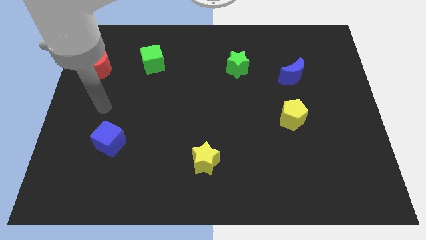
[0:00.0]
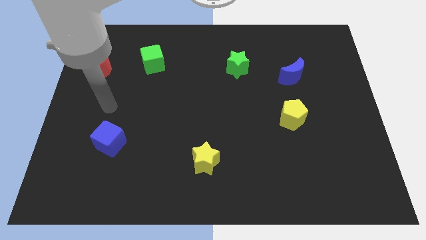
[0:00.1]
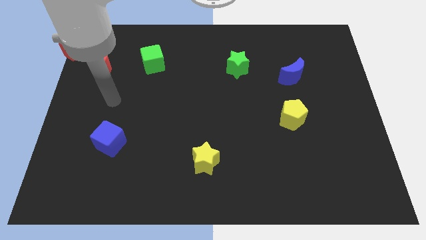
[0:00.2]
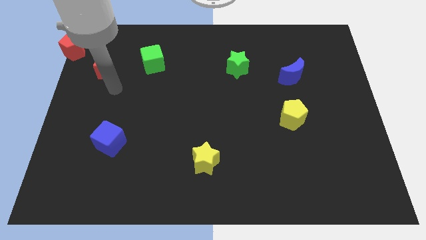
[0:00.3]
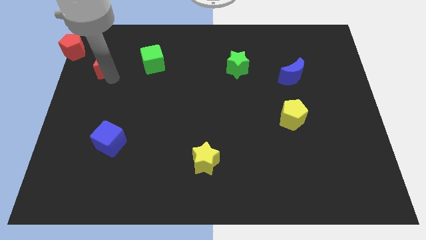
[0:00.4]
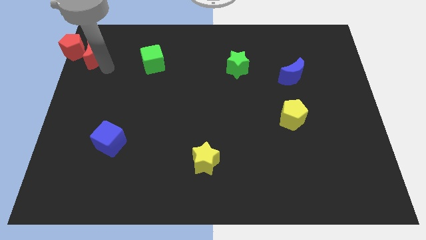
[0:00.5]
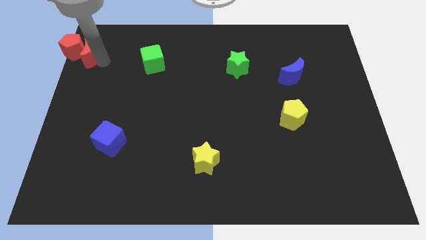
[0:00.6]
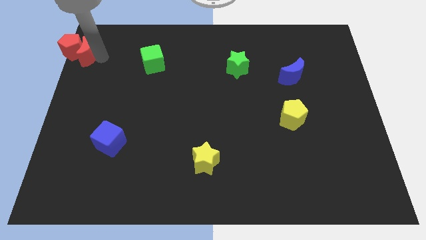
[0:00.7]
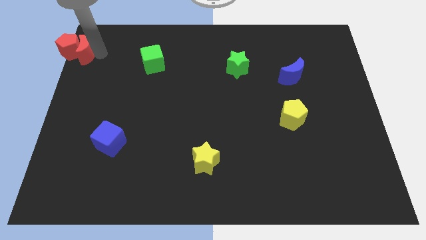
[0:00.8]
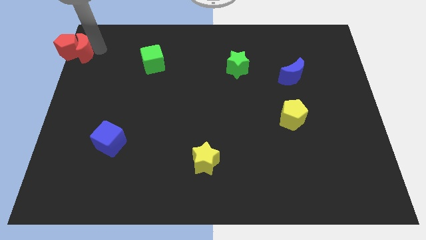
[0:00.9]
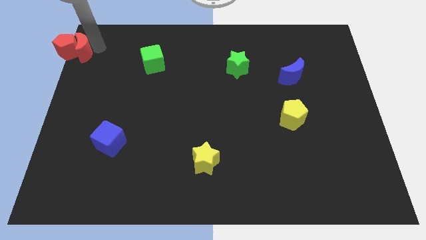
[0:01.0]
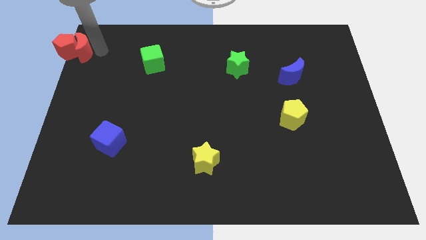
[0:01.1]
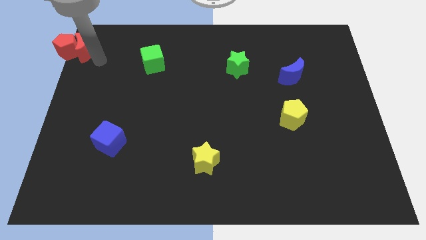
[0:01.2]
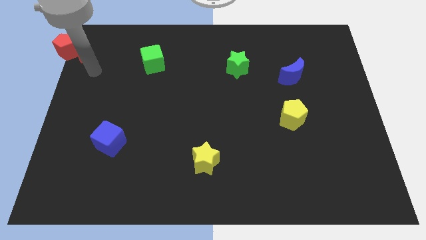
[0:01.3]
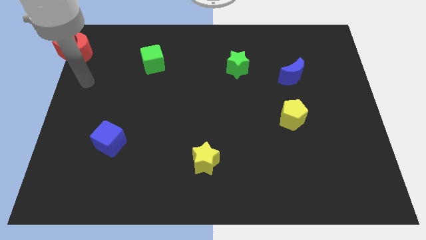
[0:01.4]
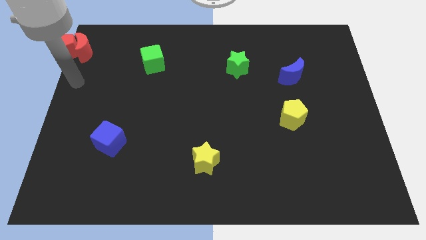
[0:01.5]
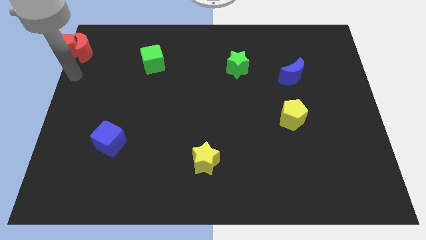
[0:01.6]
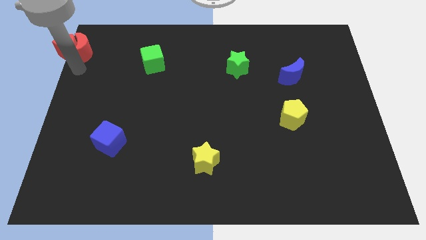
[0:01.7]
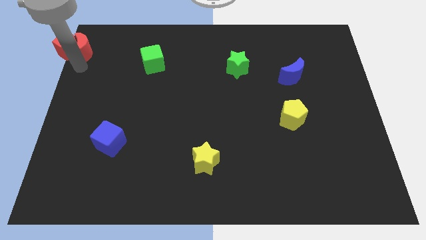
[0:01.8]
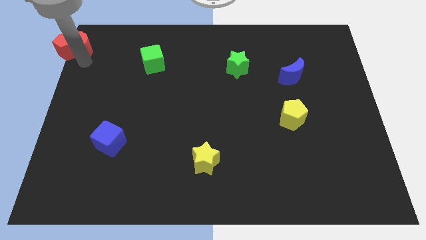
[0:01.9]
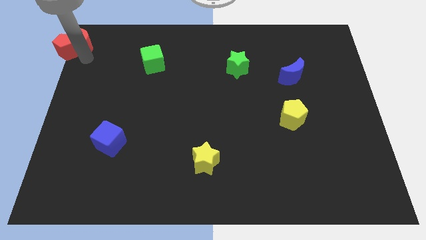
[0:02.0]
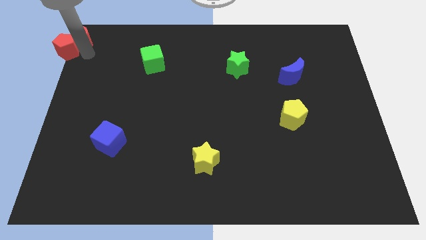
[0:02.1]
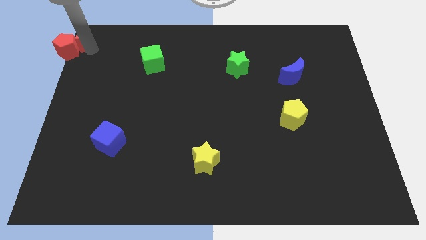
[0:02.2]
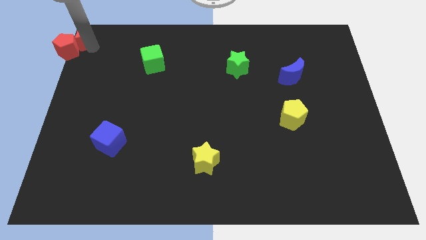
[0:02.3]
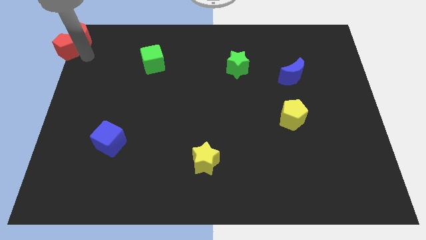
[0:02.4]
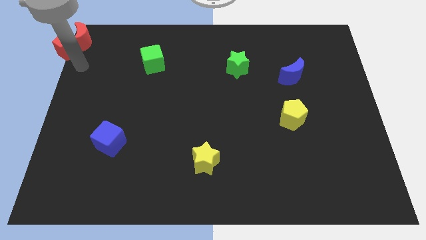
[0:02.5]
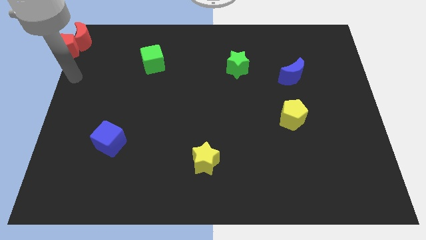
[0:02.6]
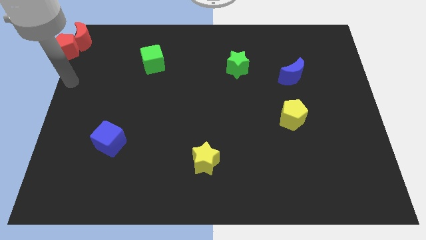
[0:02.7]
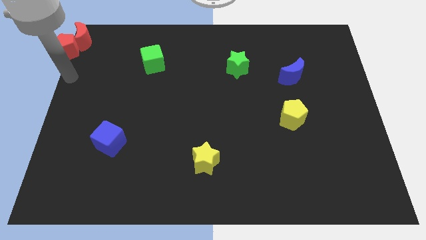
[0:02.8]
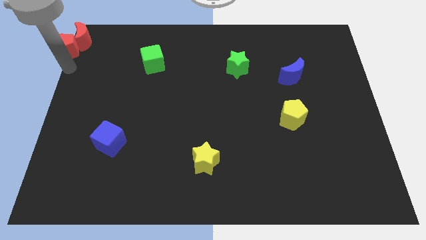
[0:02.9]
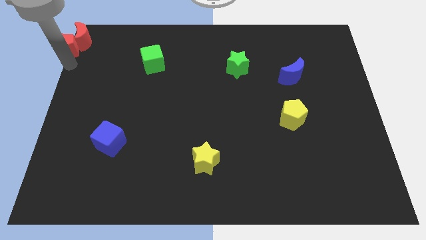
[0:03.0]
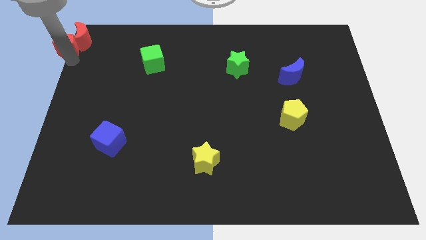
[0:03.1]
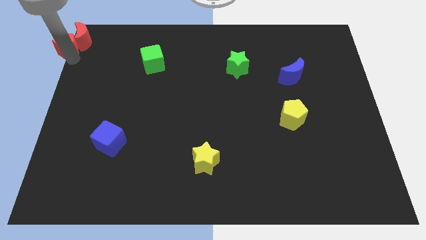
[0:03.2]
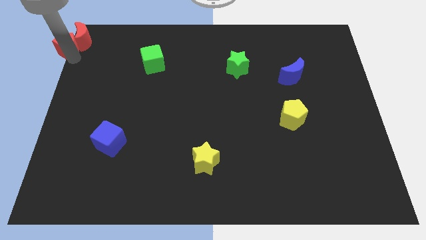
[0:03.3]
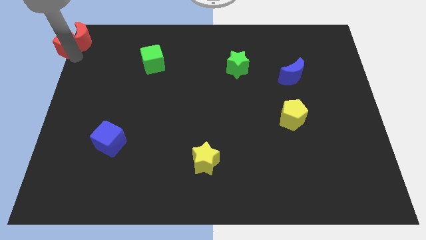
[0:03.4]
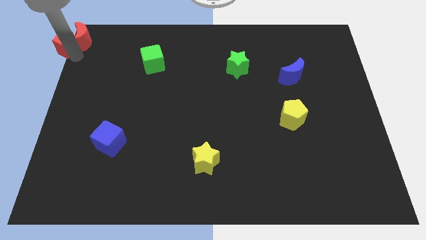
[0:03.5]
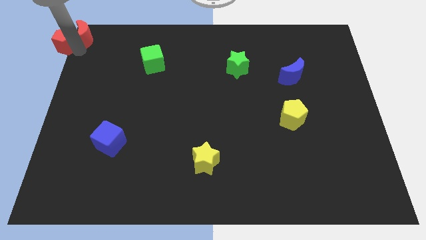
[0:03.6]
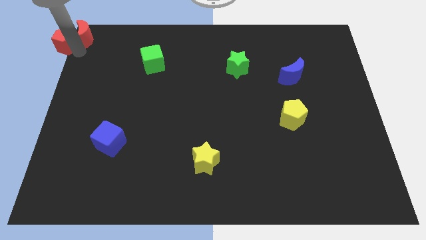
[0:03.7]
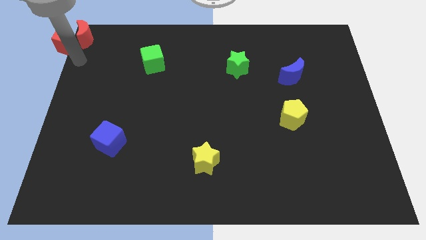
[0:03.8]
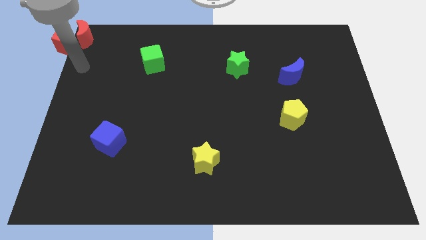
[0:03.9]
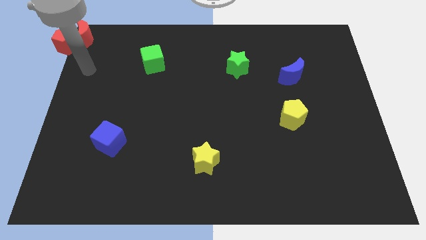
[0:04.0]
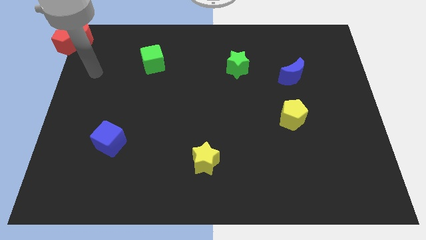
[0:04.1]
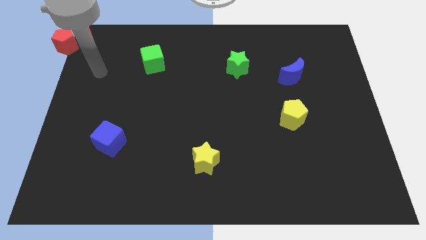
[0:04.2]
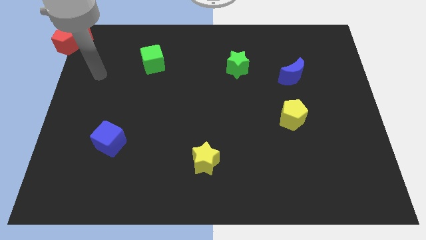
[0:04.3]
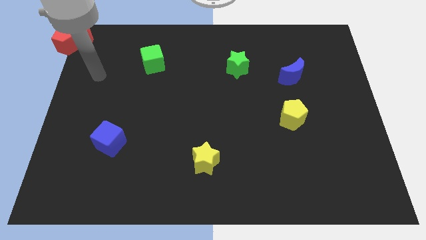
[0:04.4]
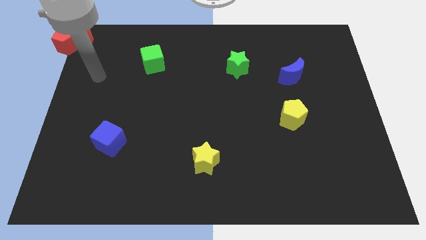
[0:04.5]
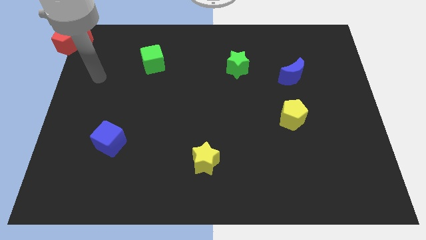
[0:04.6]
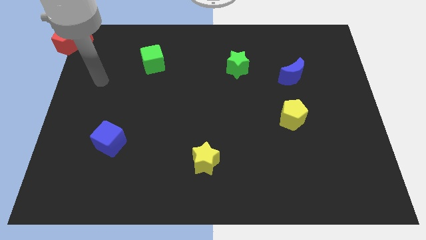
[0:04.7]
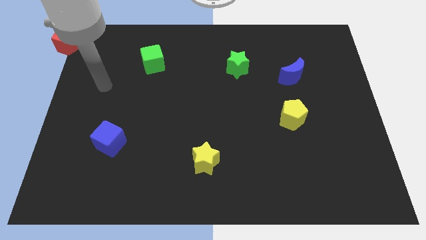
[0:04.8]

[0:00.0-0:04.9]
place the red moon and red pentagon at the top left of the board

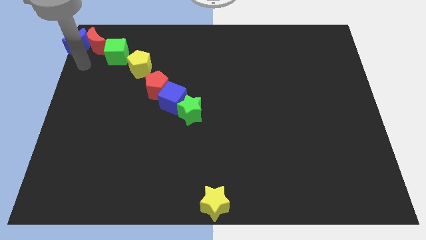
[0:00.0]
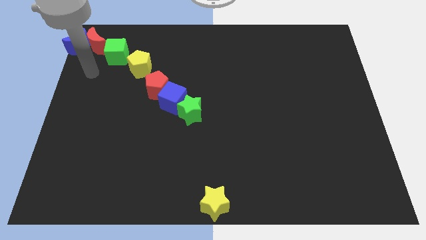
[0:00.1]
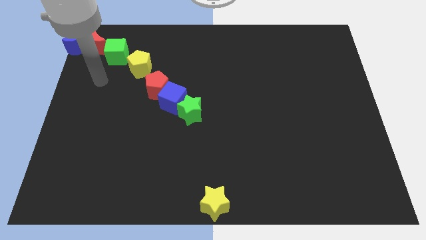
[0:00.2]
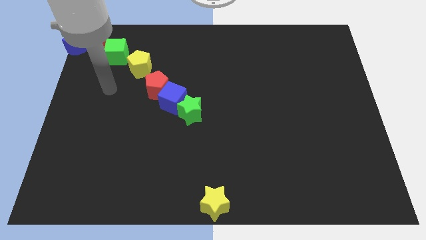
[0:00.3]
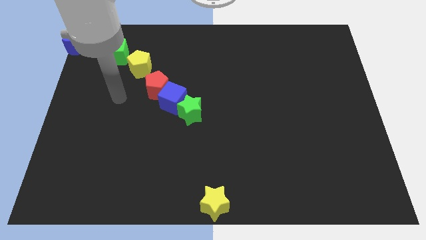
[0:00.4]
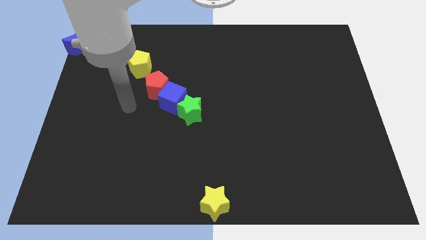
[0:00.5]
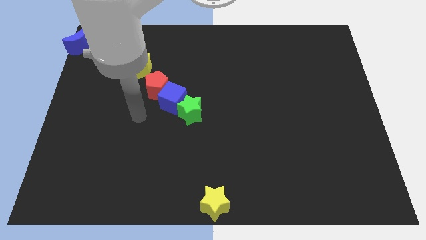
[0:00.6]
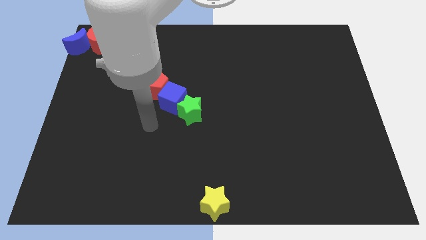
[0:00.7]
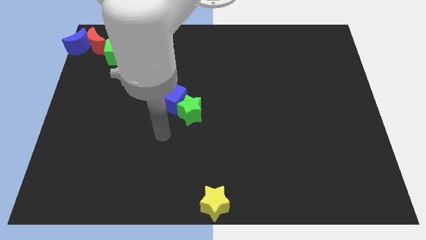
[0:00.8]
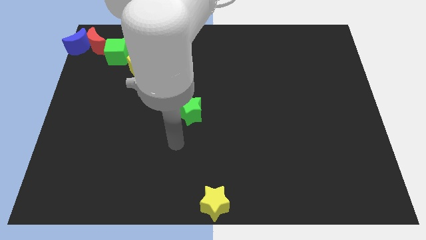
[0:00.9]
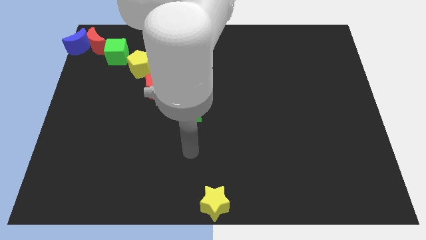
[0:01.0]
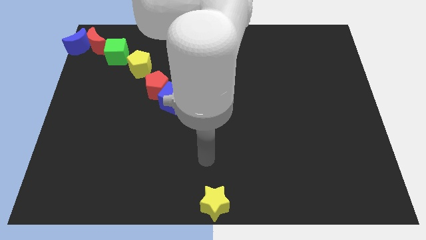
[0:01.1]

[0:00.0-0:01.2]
move your arm away from the blue moon

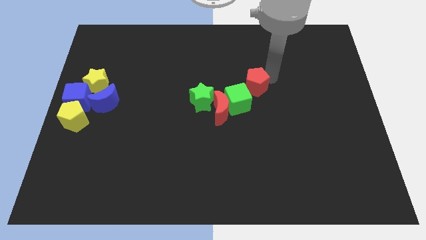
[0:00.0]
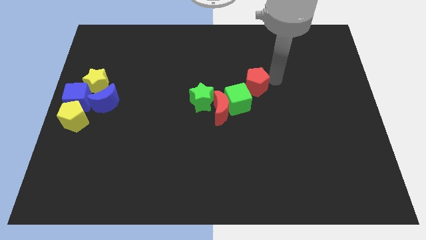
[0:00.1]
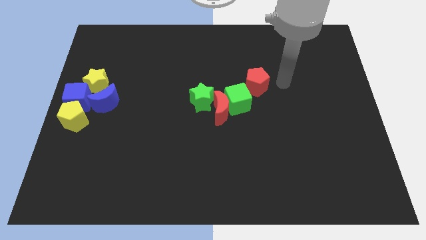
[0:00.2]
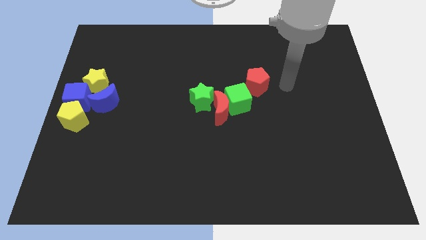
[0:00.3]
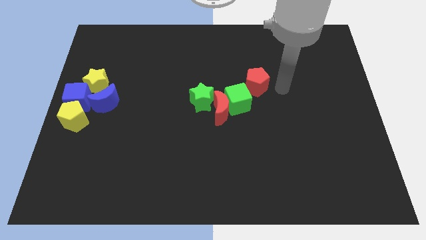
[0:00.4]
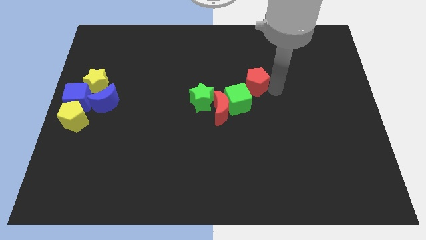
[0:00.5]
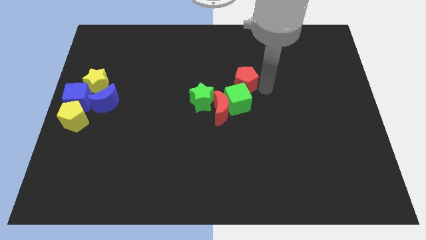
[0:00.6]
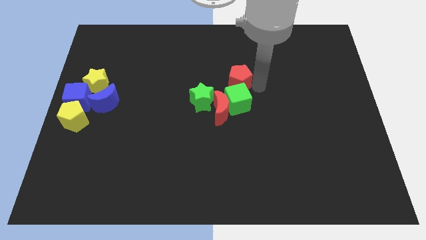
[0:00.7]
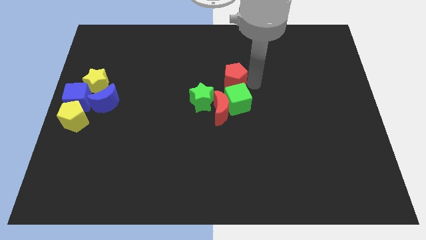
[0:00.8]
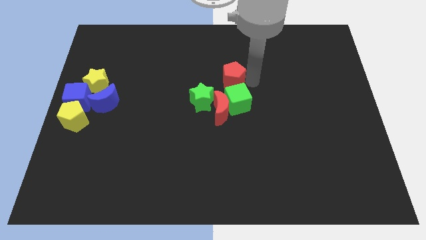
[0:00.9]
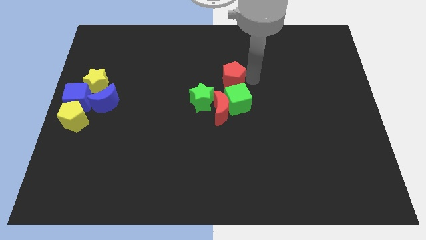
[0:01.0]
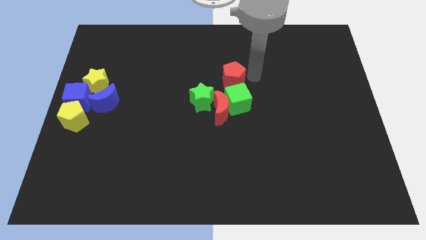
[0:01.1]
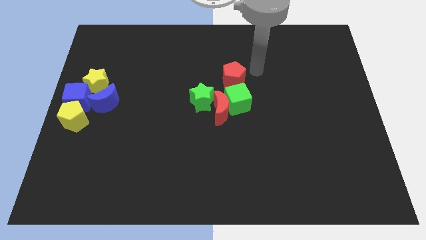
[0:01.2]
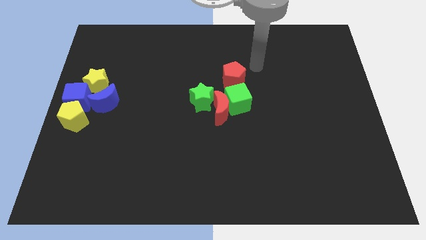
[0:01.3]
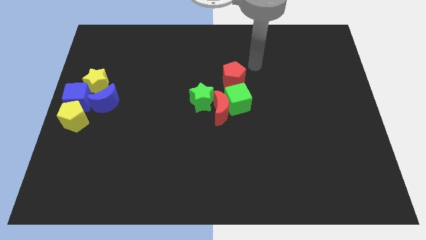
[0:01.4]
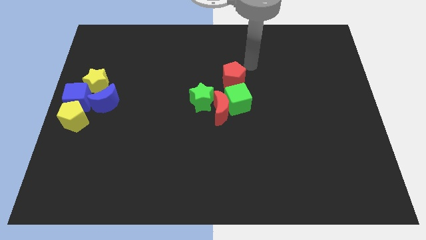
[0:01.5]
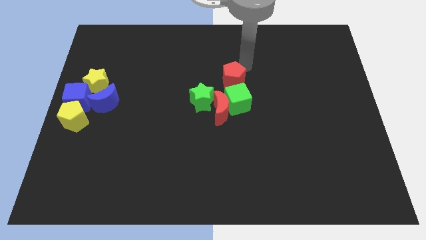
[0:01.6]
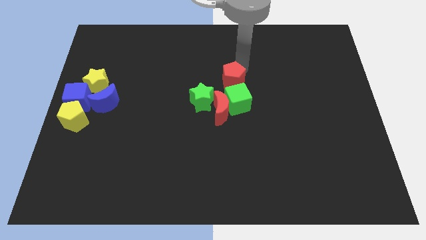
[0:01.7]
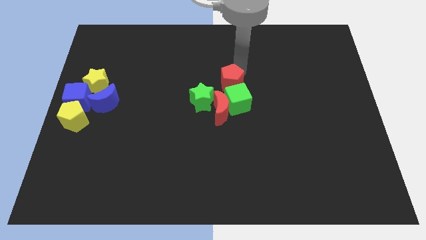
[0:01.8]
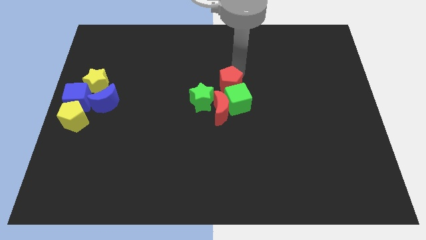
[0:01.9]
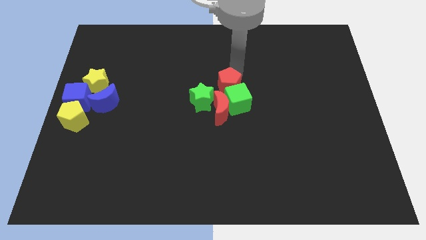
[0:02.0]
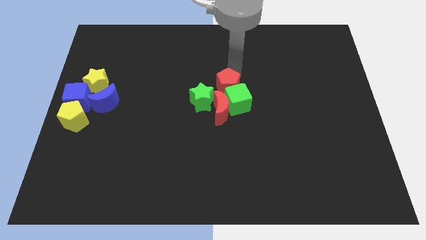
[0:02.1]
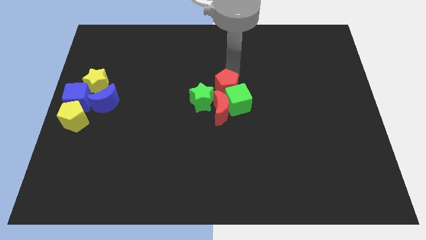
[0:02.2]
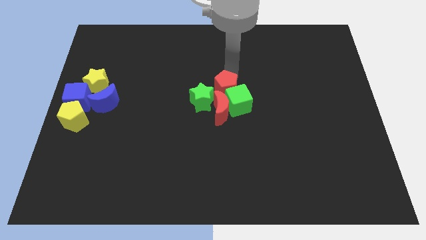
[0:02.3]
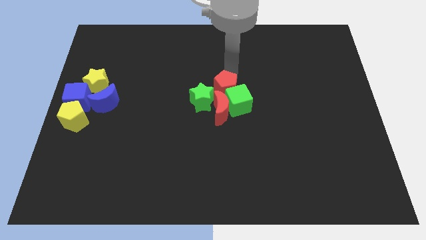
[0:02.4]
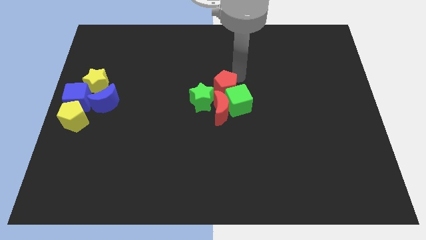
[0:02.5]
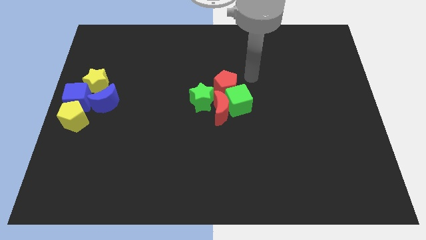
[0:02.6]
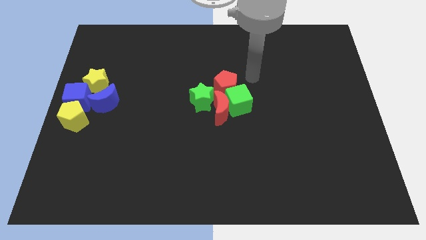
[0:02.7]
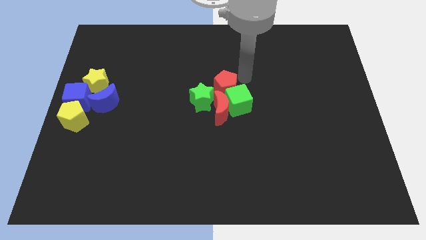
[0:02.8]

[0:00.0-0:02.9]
place the red pentagon at the top of red moon
